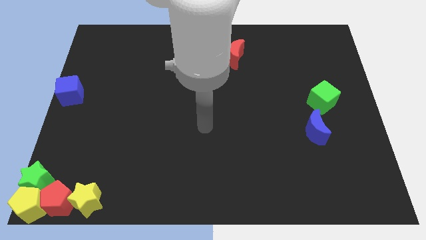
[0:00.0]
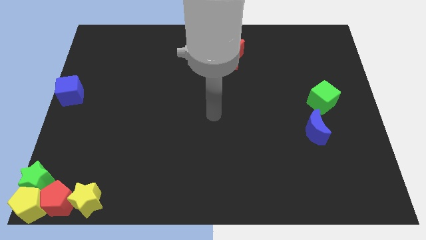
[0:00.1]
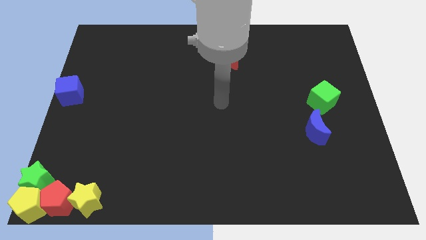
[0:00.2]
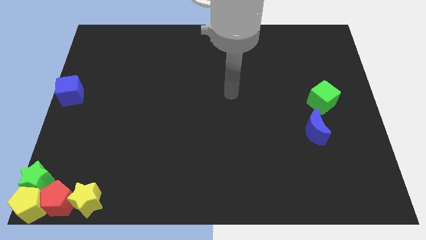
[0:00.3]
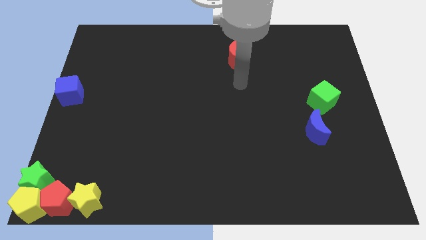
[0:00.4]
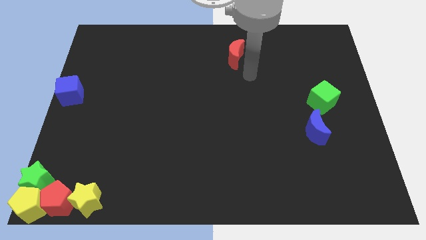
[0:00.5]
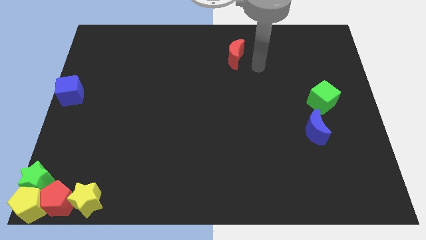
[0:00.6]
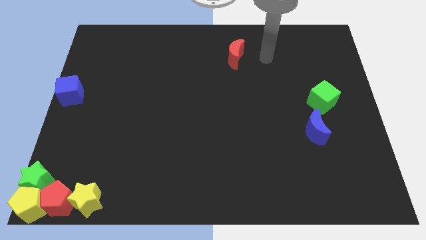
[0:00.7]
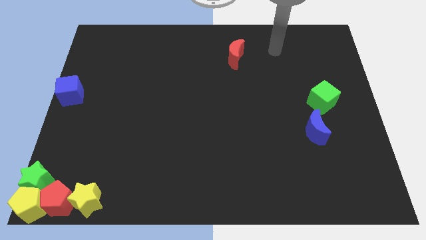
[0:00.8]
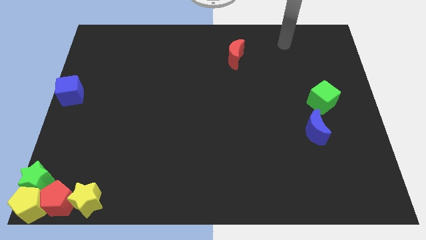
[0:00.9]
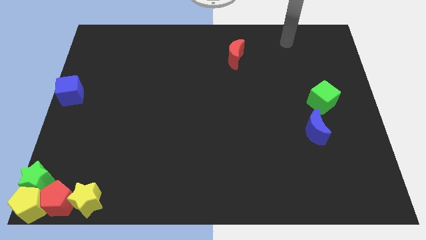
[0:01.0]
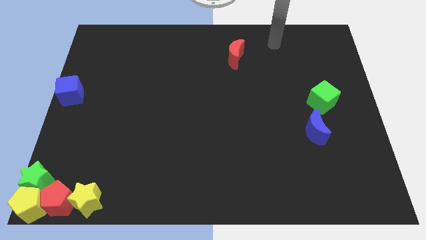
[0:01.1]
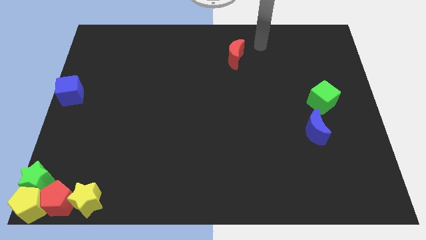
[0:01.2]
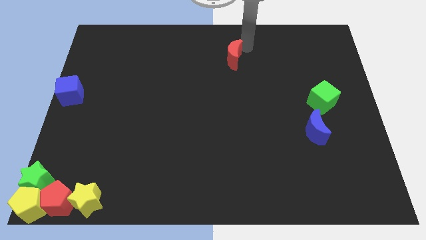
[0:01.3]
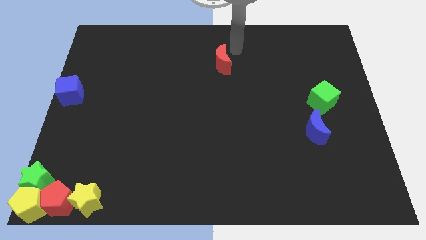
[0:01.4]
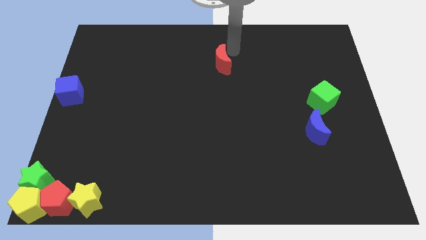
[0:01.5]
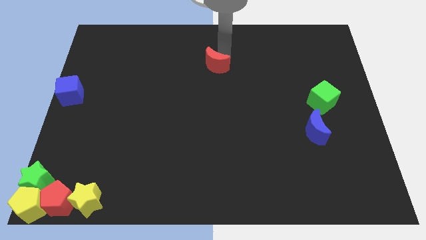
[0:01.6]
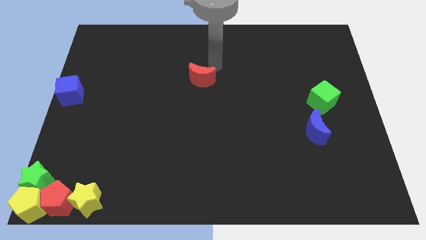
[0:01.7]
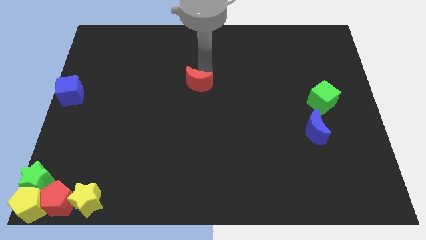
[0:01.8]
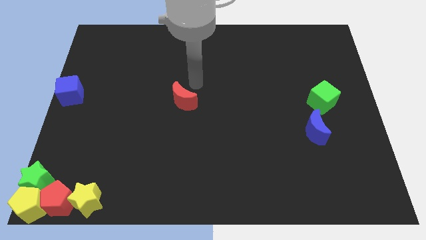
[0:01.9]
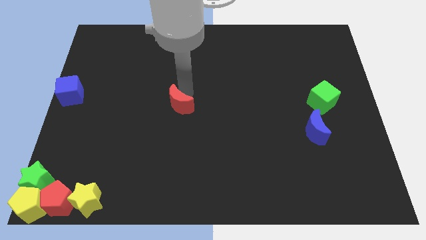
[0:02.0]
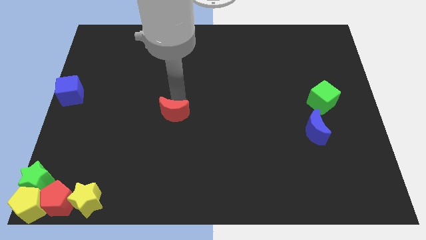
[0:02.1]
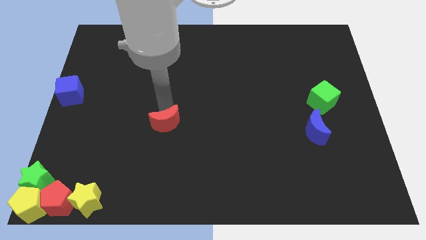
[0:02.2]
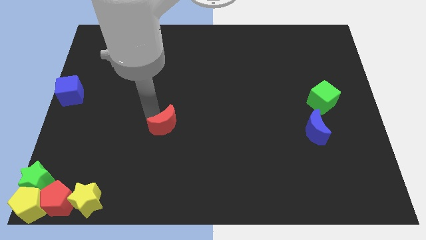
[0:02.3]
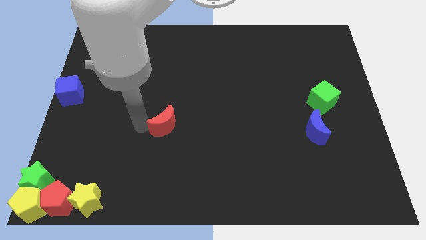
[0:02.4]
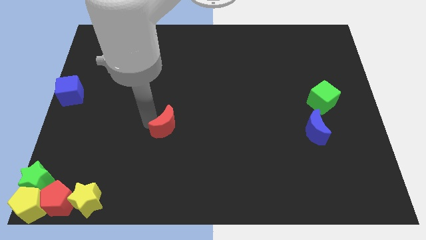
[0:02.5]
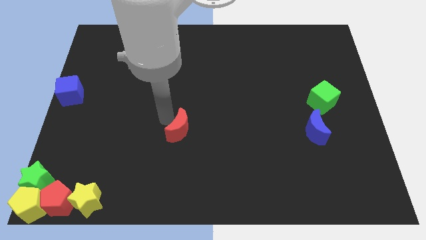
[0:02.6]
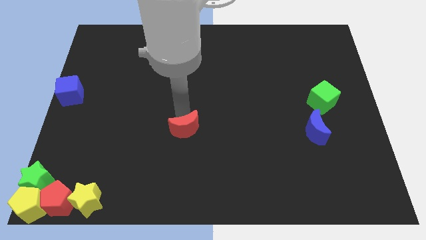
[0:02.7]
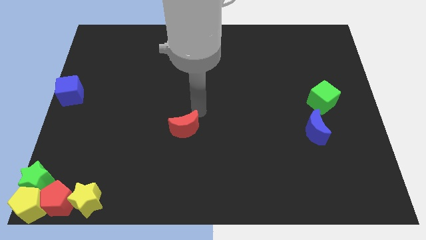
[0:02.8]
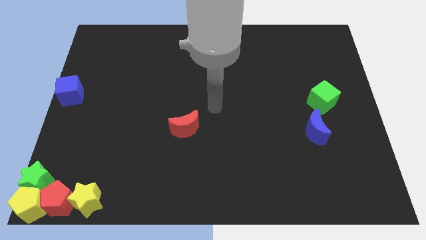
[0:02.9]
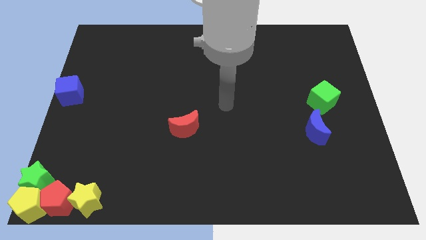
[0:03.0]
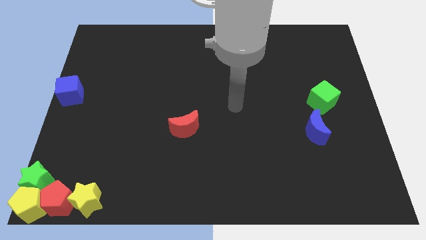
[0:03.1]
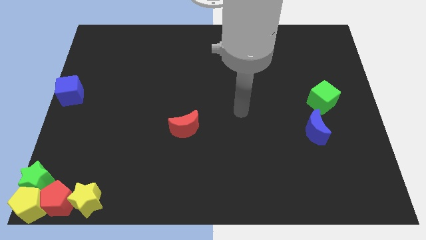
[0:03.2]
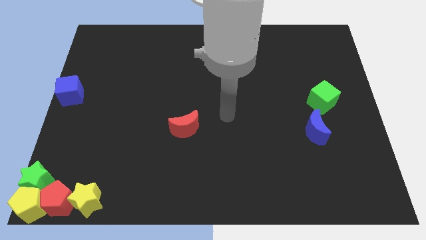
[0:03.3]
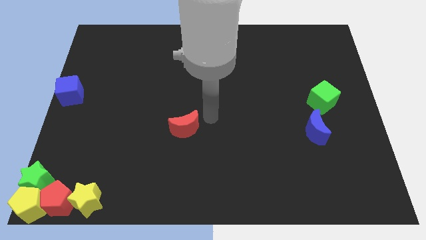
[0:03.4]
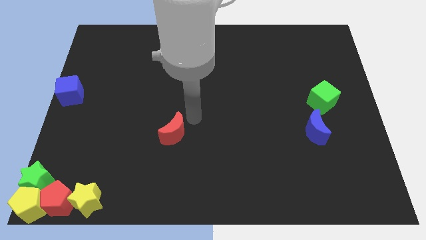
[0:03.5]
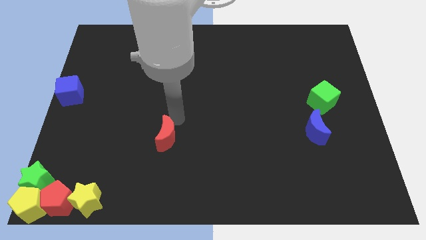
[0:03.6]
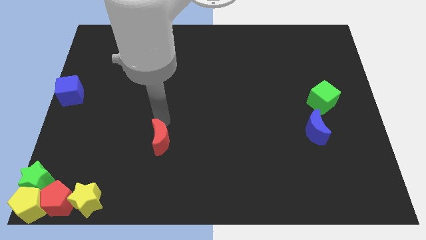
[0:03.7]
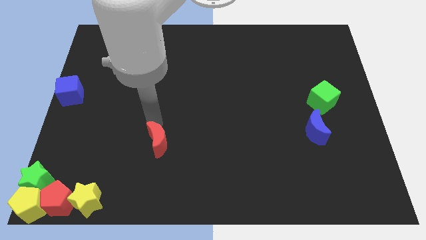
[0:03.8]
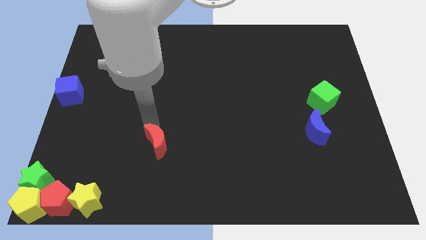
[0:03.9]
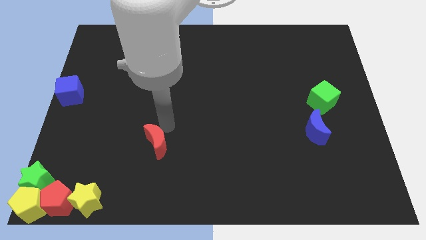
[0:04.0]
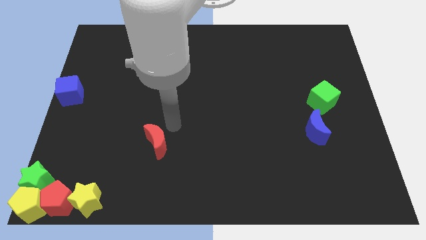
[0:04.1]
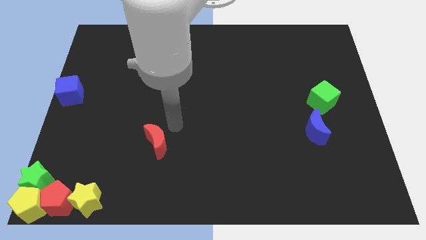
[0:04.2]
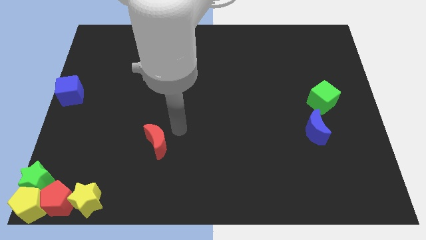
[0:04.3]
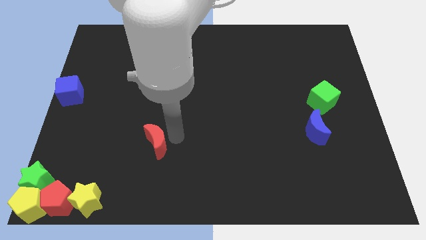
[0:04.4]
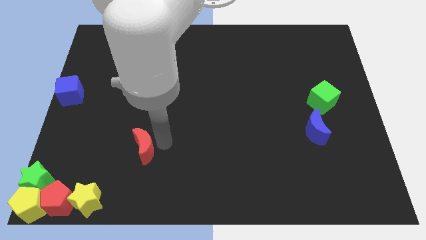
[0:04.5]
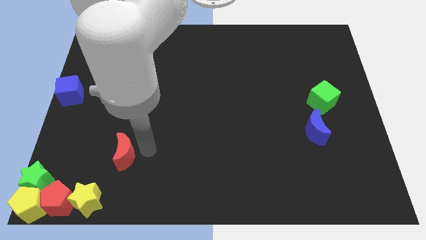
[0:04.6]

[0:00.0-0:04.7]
push the red crescent towards the yellow star

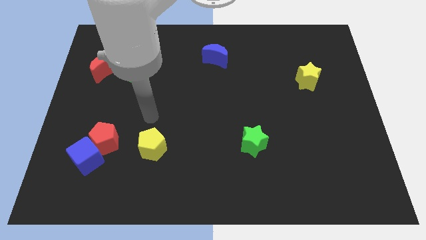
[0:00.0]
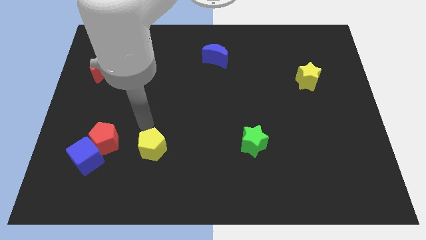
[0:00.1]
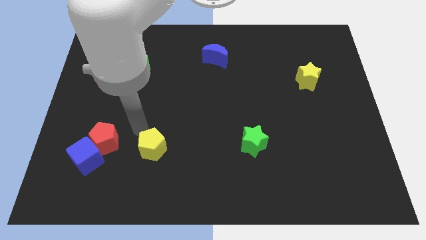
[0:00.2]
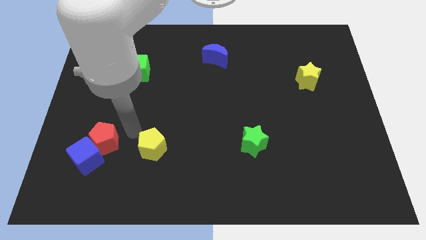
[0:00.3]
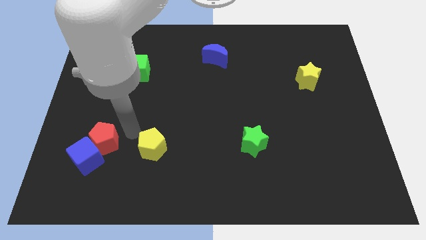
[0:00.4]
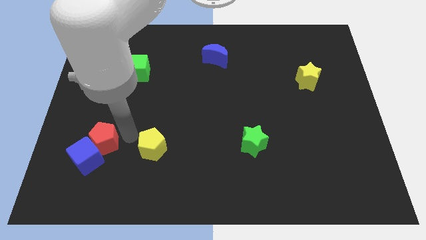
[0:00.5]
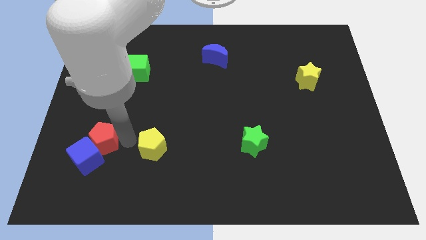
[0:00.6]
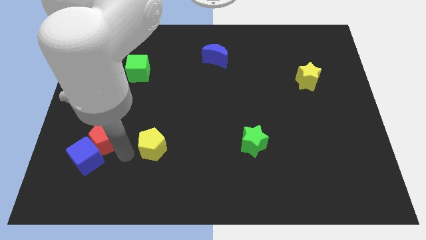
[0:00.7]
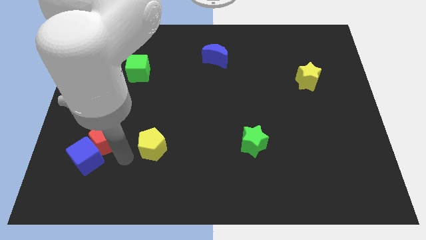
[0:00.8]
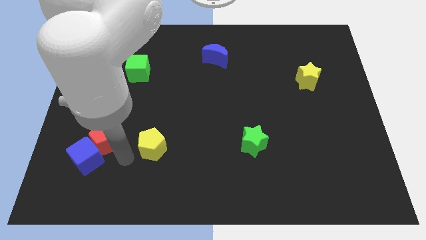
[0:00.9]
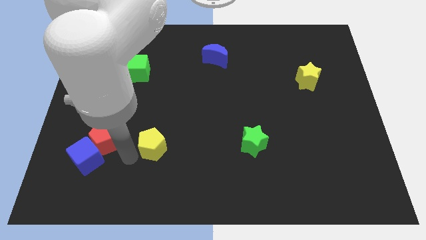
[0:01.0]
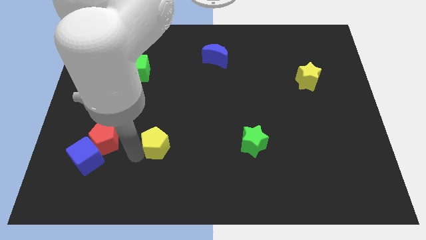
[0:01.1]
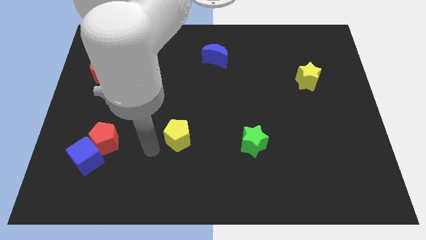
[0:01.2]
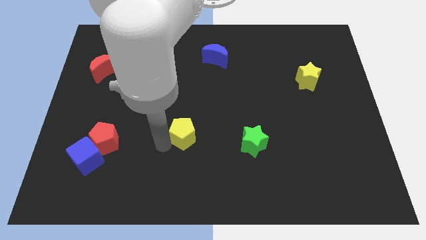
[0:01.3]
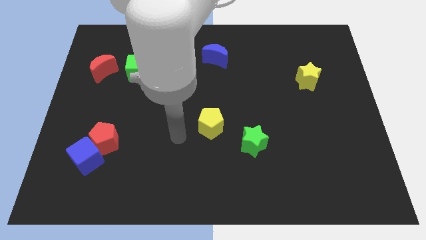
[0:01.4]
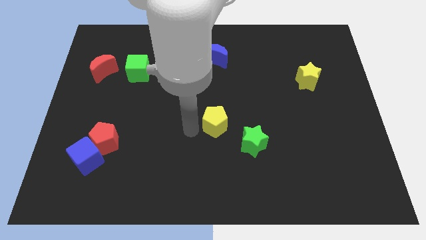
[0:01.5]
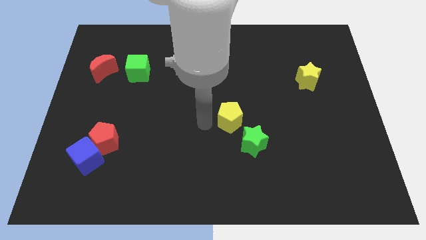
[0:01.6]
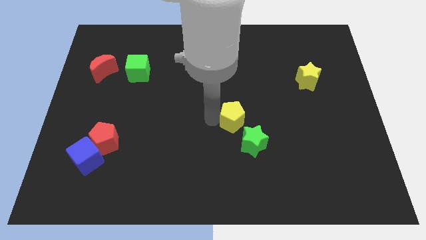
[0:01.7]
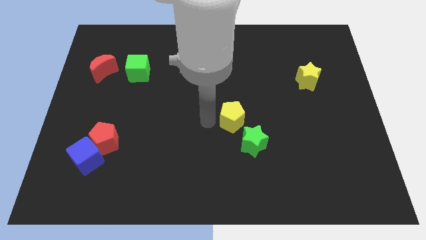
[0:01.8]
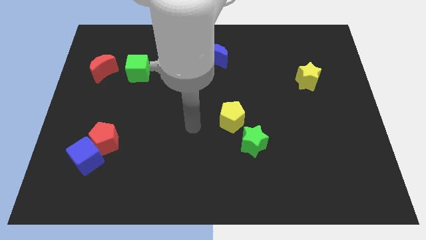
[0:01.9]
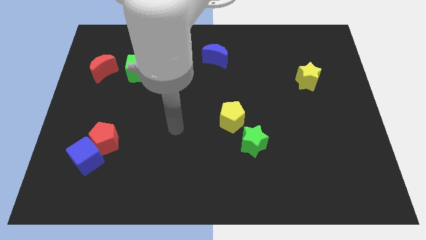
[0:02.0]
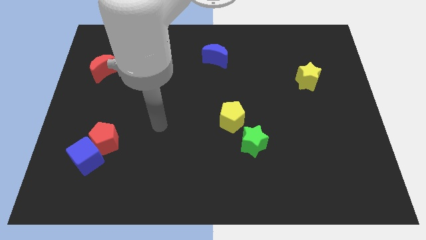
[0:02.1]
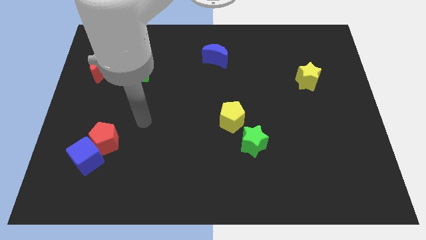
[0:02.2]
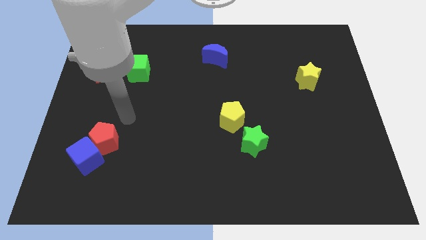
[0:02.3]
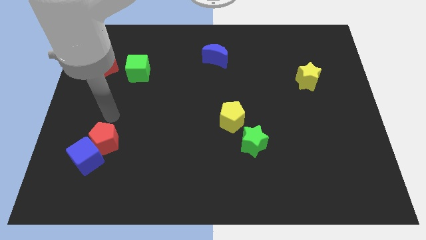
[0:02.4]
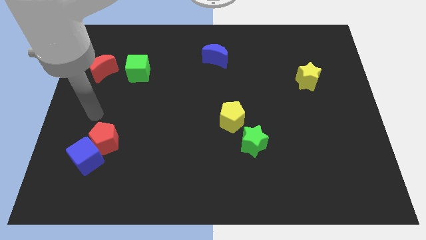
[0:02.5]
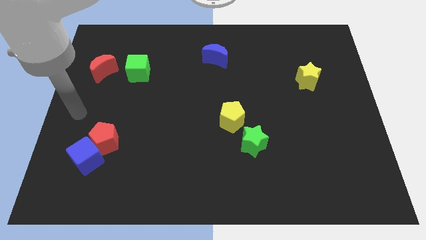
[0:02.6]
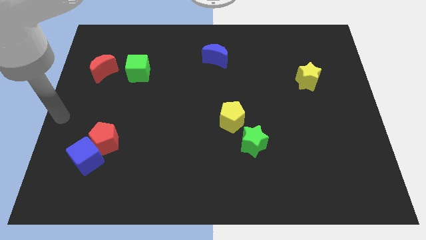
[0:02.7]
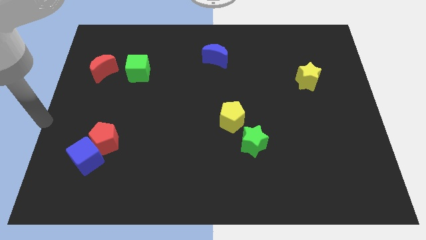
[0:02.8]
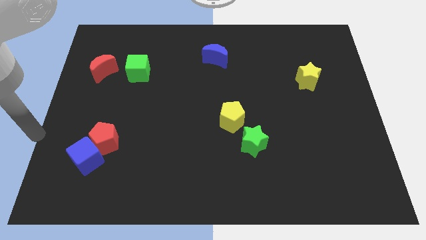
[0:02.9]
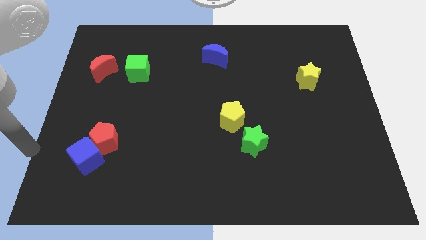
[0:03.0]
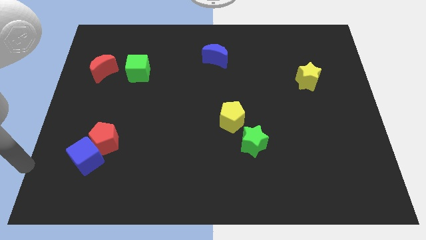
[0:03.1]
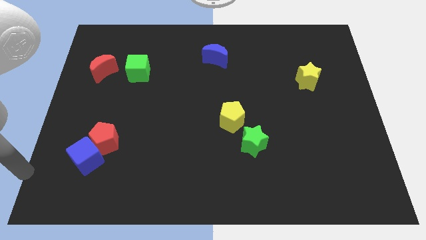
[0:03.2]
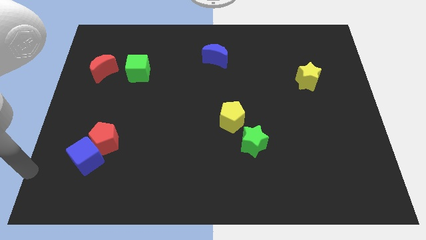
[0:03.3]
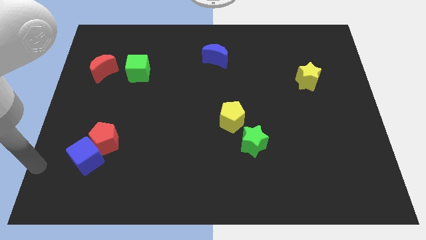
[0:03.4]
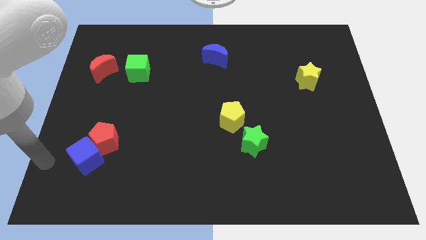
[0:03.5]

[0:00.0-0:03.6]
push the yellow pentagon above the green star

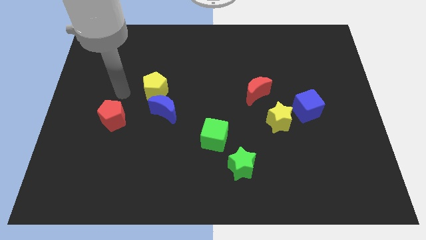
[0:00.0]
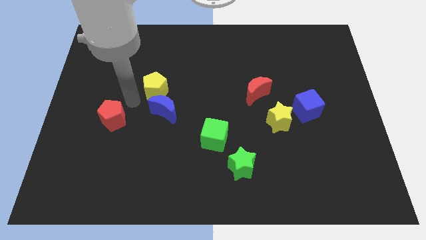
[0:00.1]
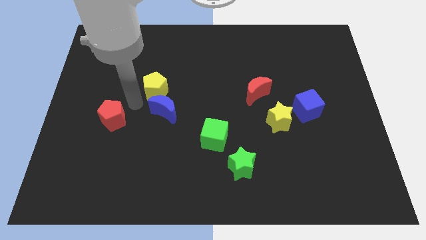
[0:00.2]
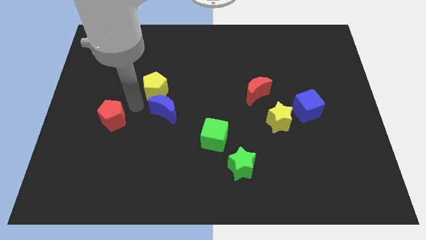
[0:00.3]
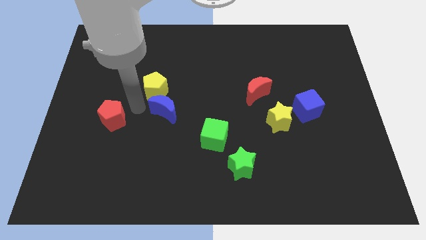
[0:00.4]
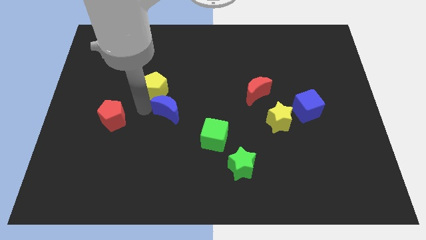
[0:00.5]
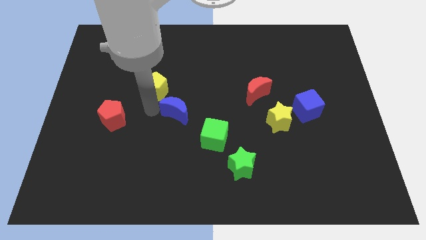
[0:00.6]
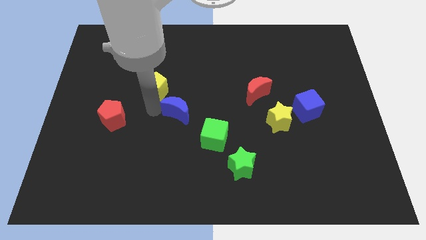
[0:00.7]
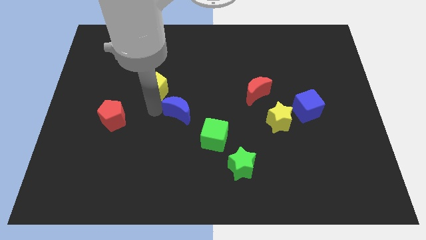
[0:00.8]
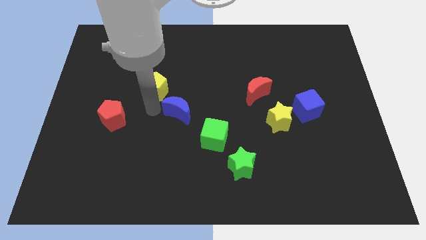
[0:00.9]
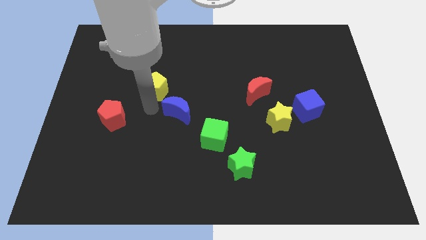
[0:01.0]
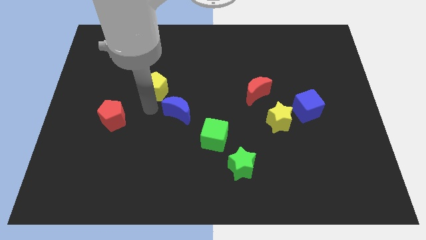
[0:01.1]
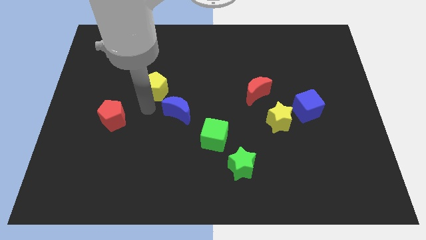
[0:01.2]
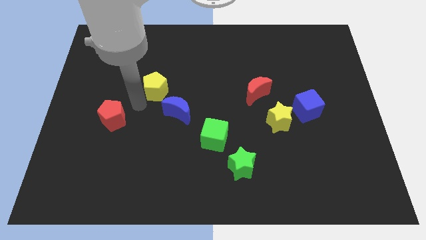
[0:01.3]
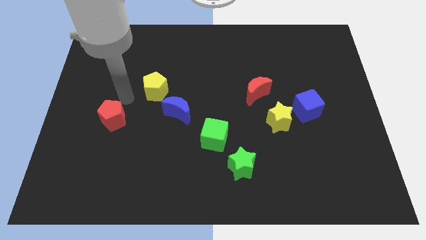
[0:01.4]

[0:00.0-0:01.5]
move the blue crescent diagonal to the green cube
